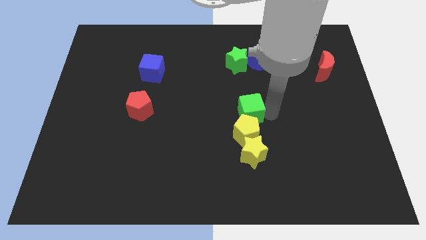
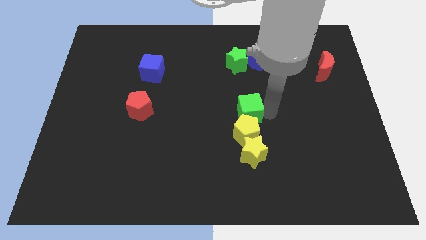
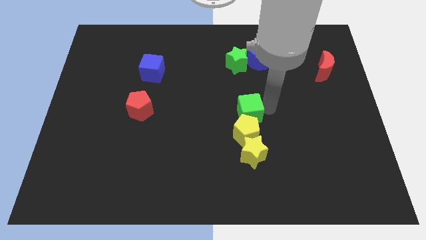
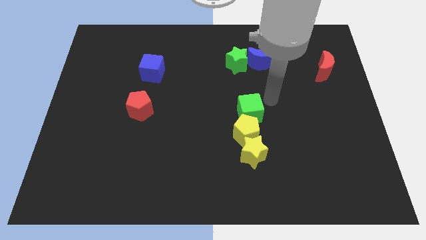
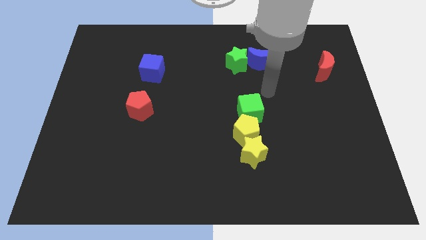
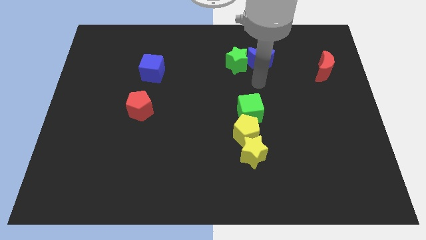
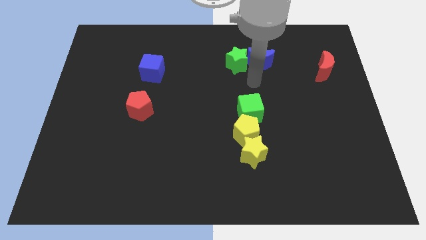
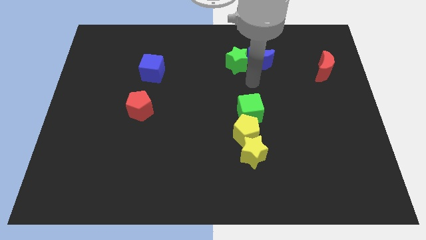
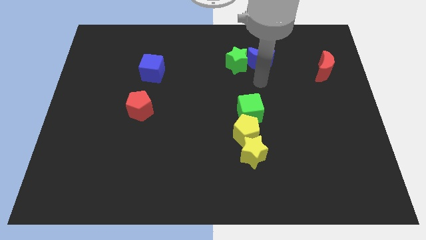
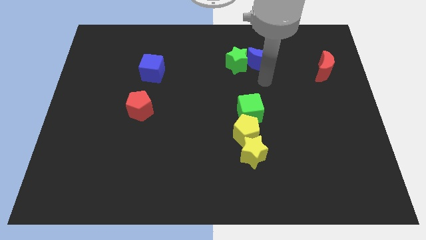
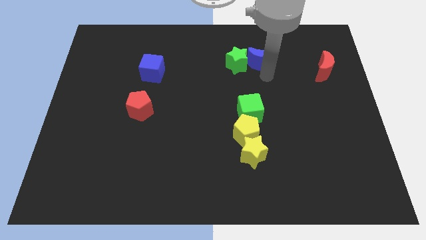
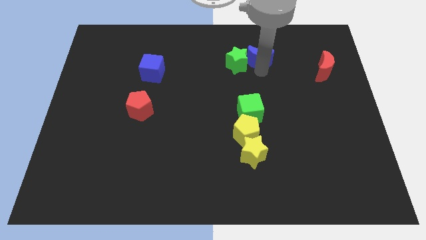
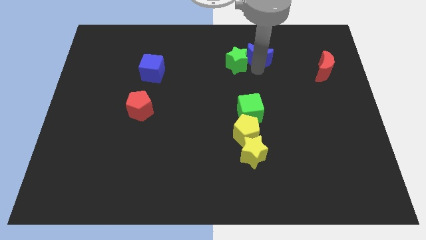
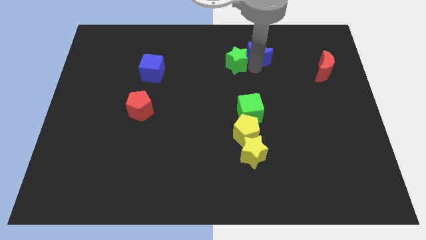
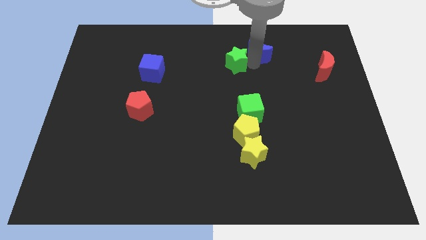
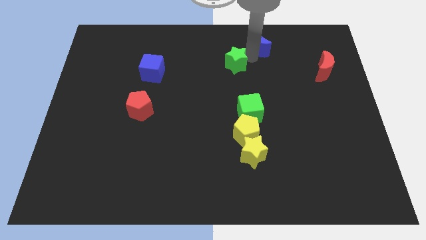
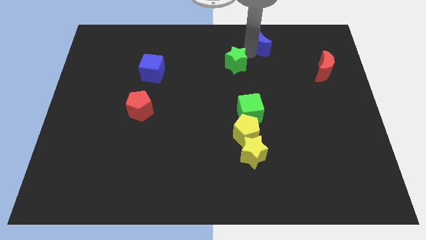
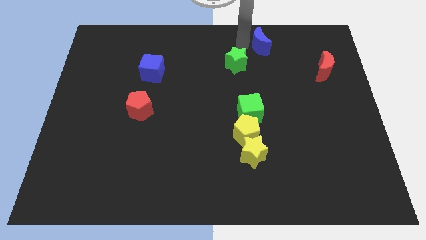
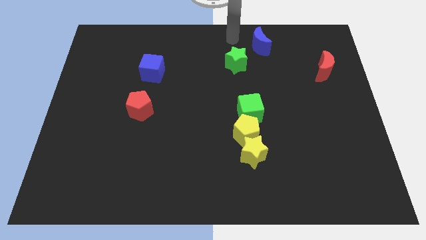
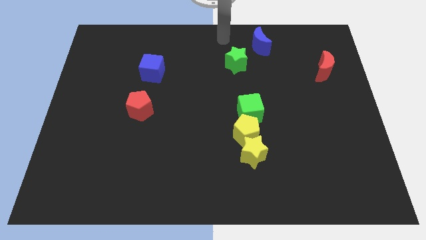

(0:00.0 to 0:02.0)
separate the blue moon from the green star

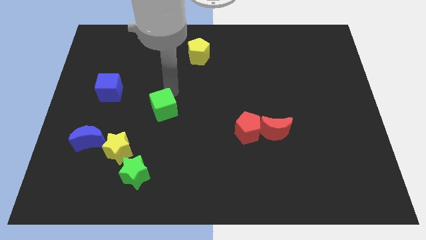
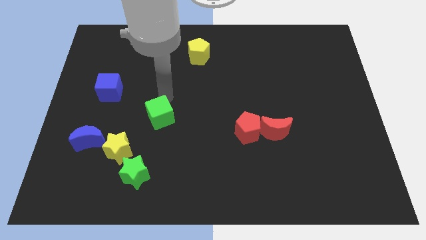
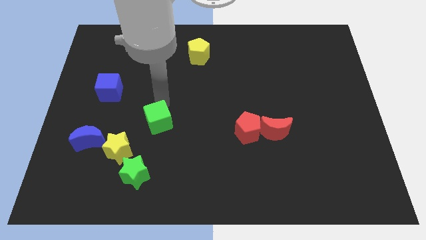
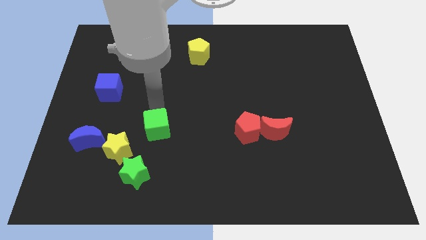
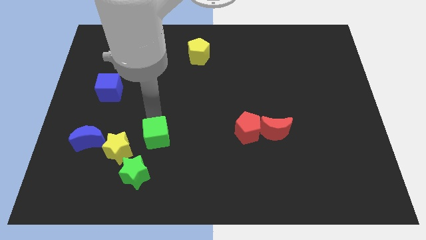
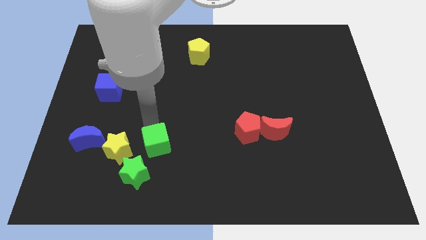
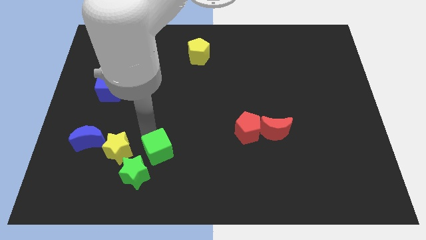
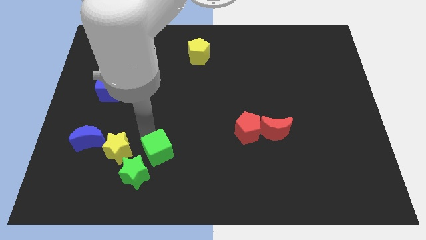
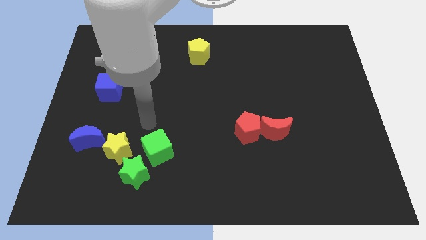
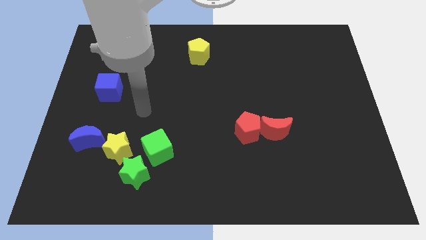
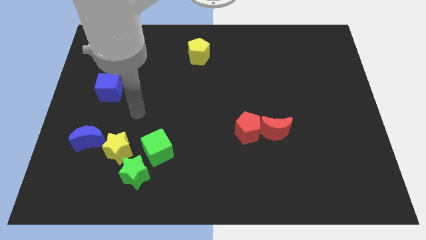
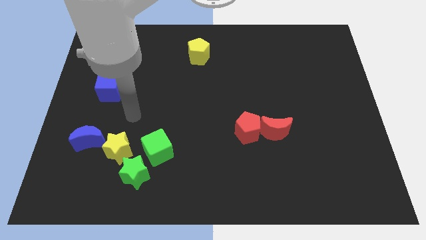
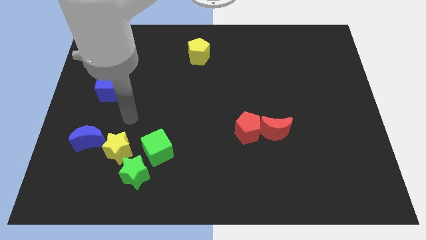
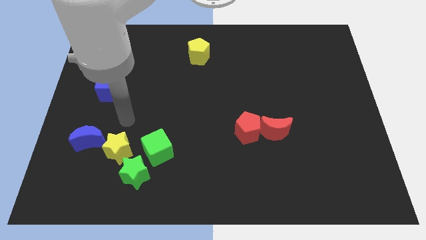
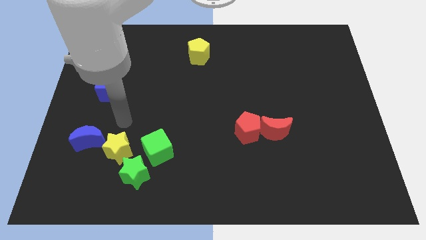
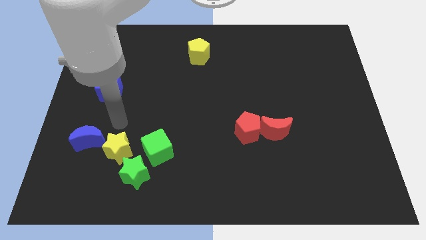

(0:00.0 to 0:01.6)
place the green cube at the right of the yellow star

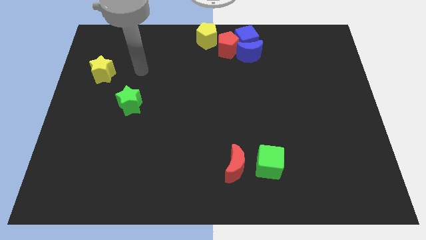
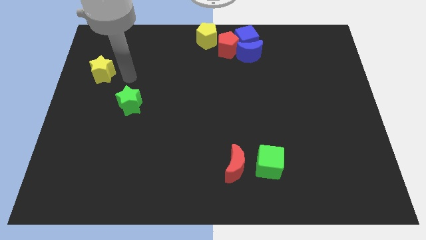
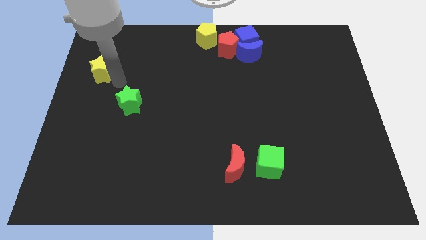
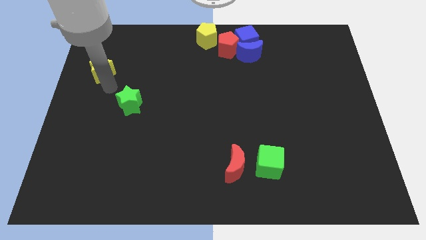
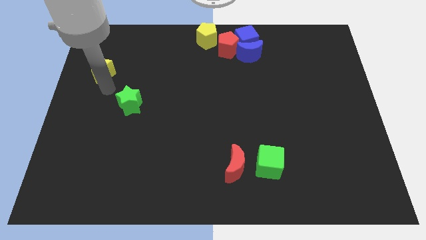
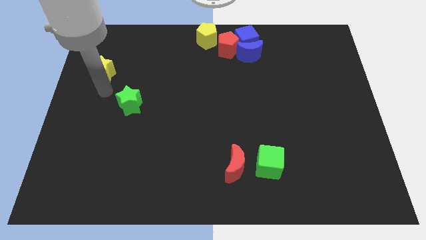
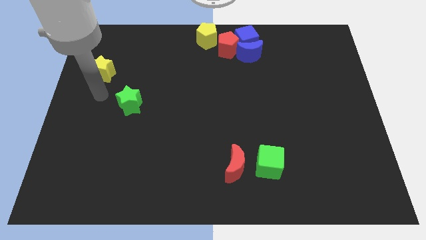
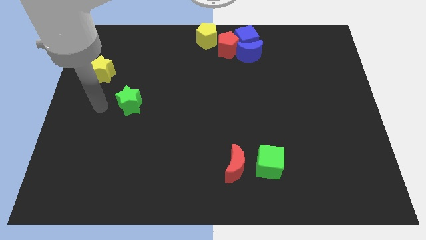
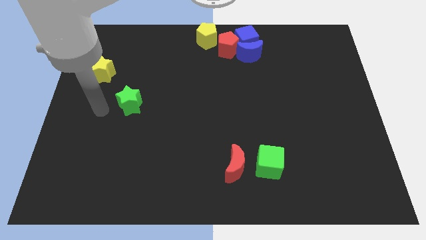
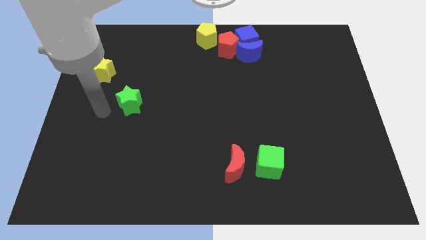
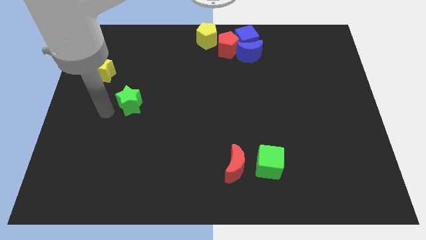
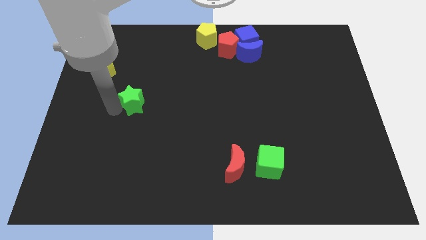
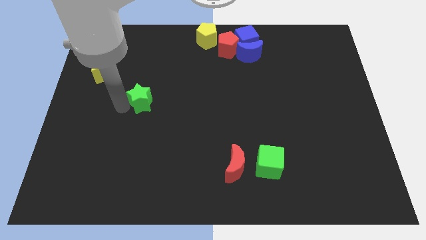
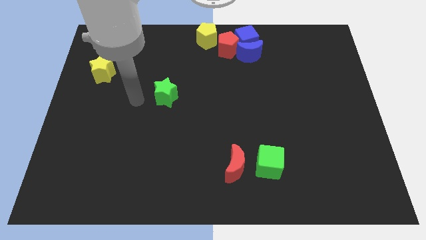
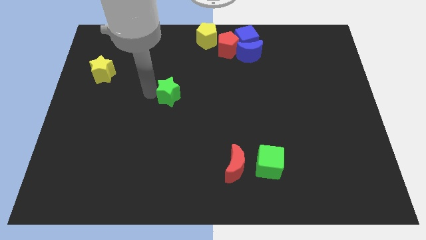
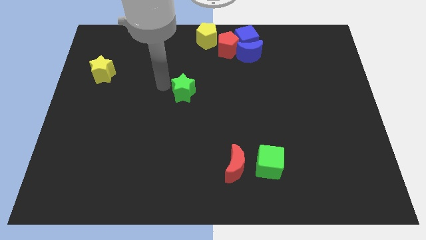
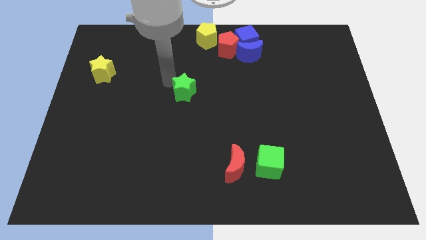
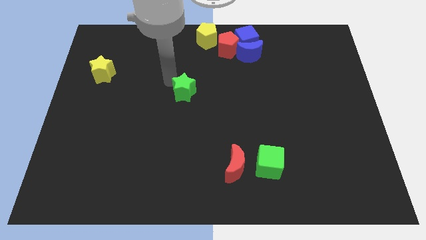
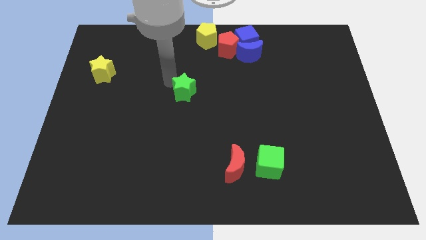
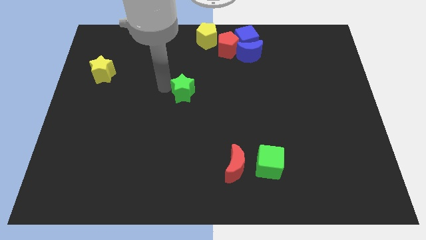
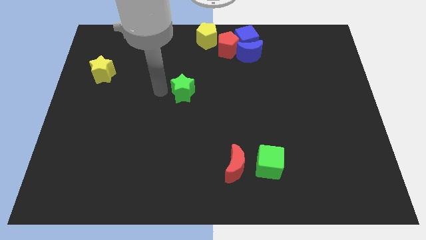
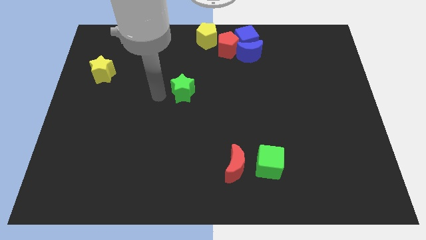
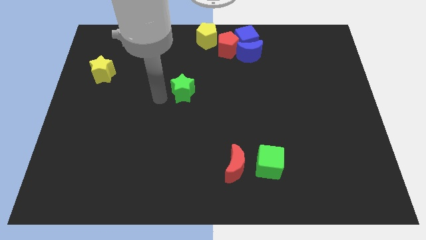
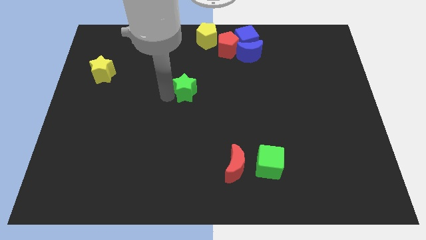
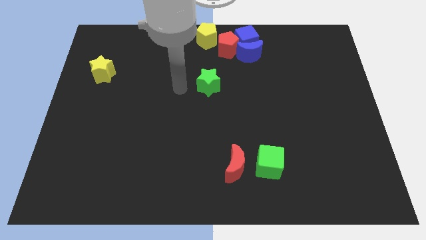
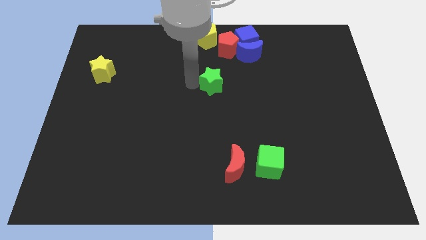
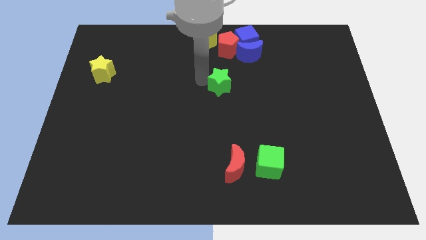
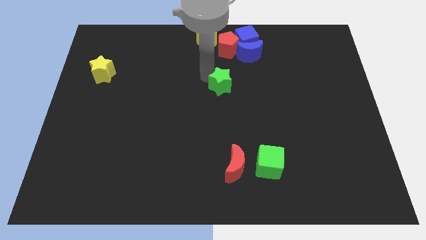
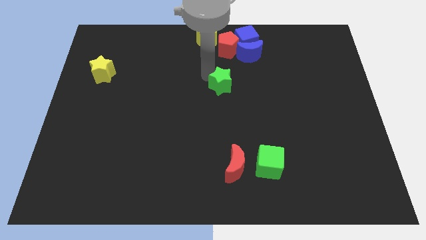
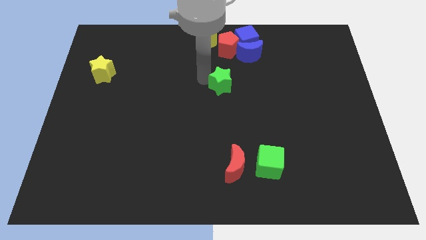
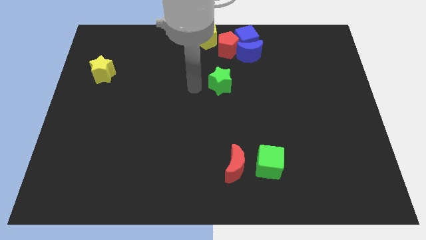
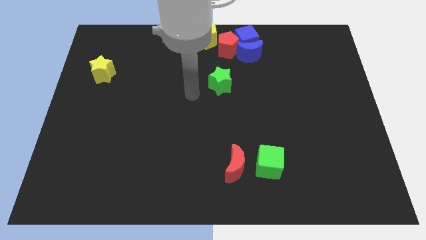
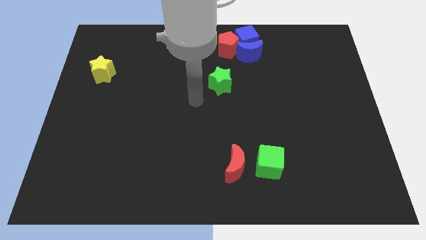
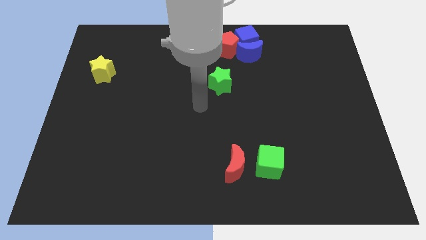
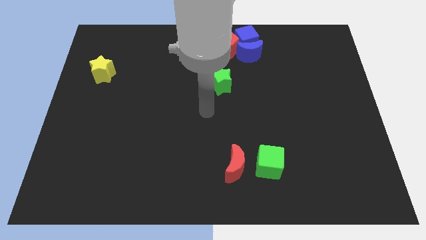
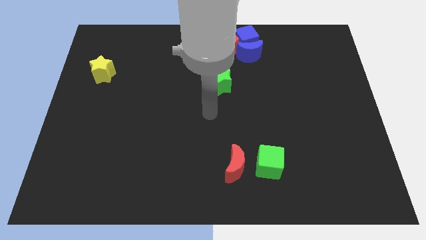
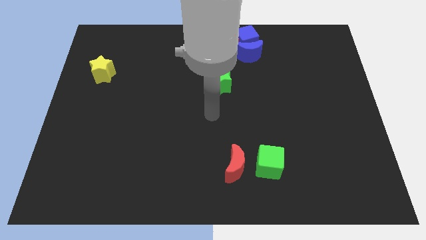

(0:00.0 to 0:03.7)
push the green satr to bottom of the red pentagon

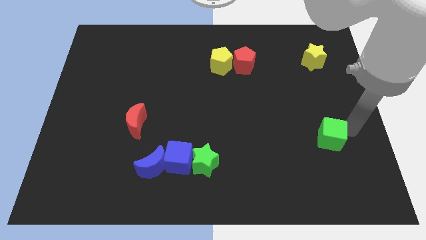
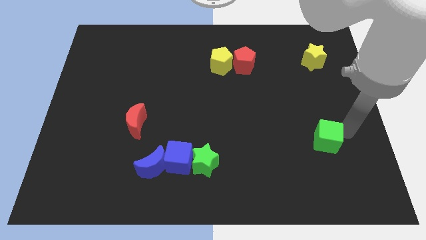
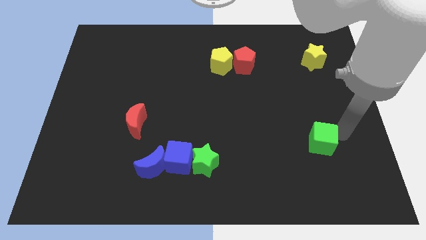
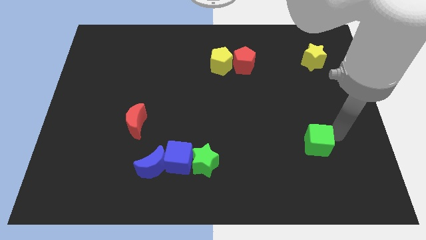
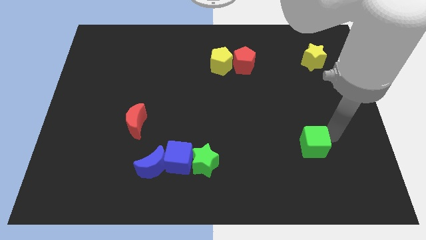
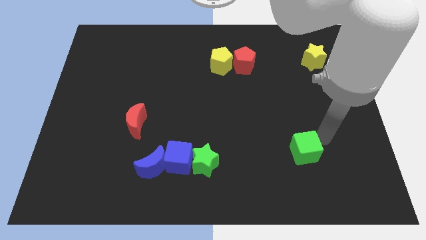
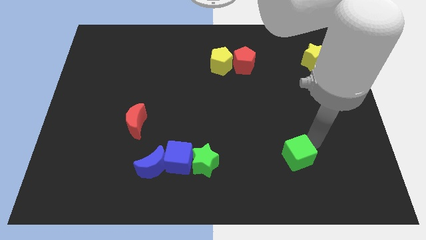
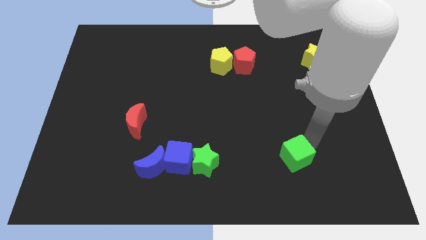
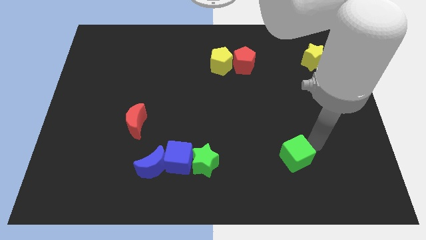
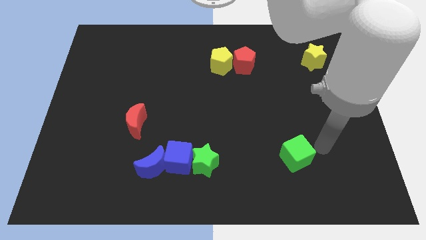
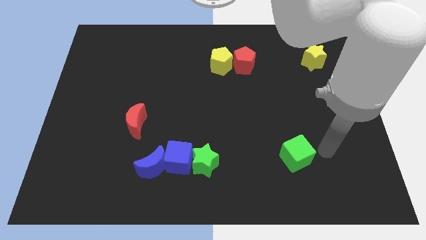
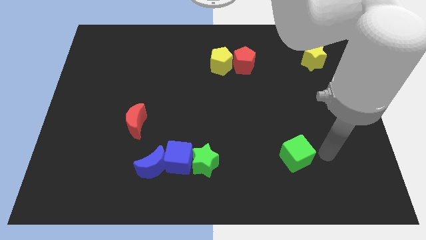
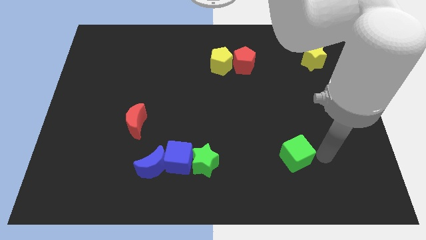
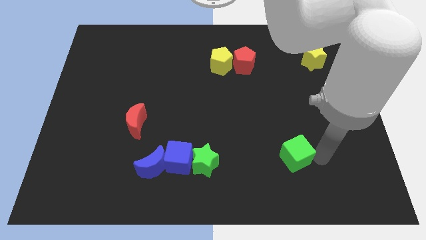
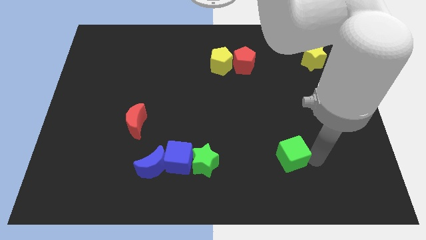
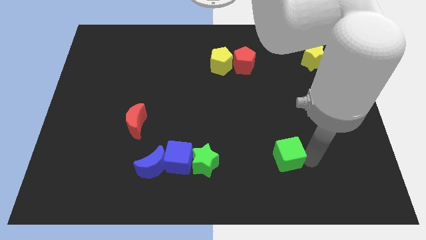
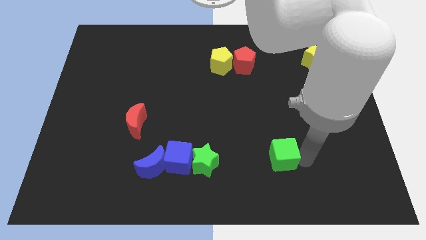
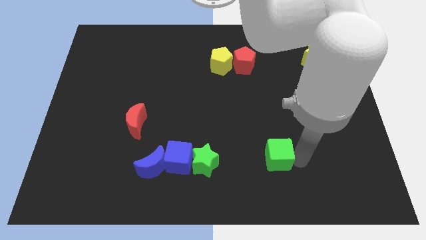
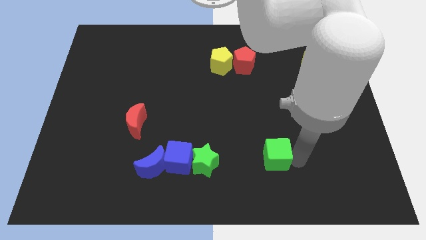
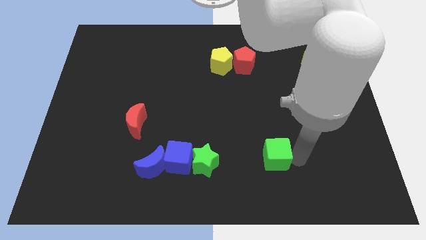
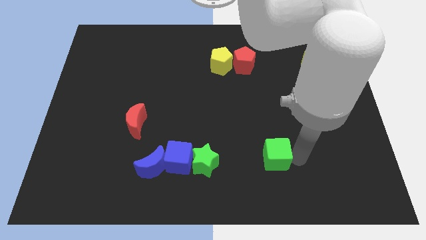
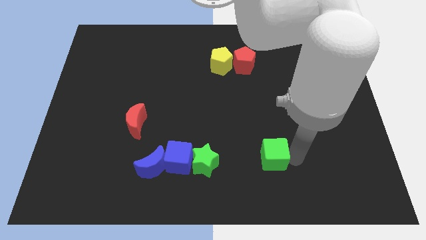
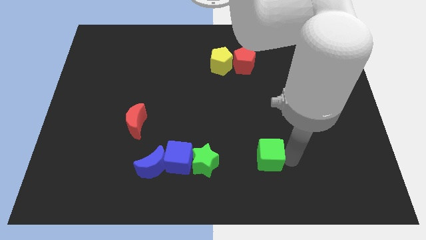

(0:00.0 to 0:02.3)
push the green cube towards the green star
